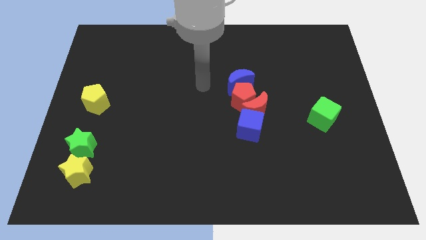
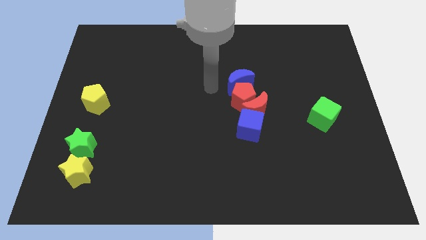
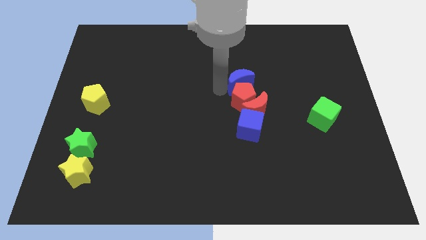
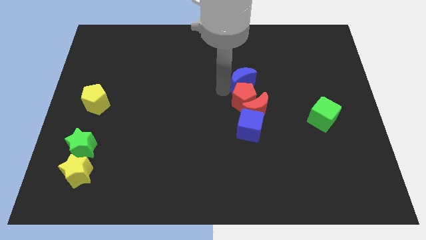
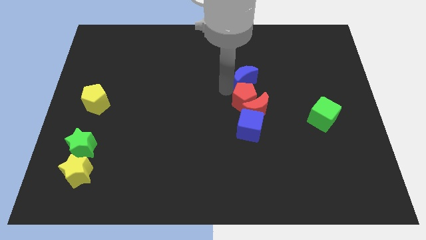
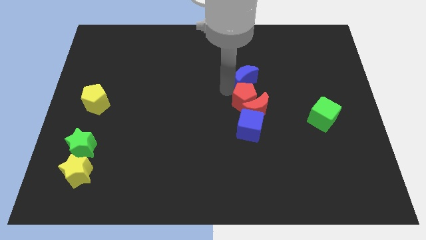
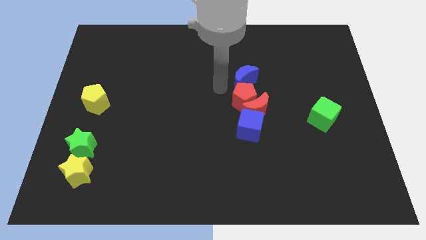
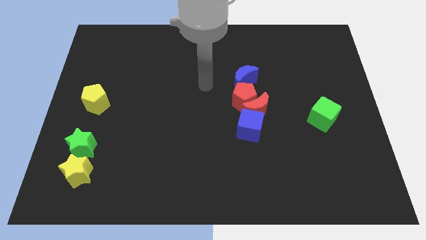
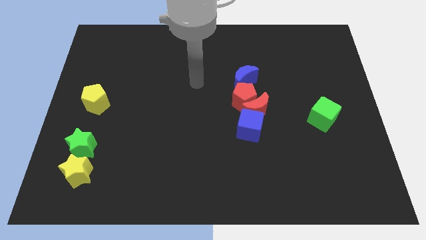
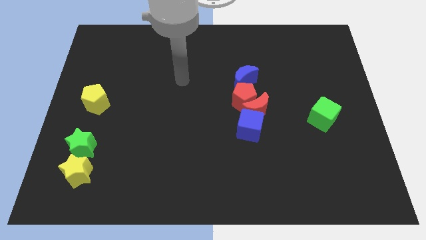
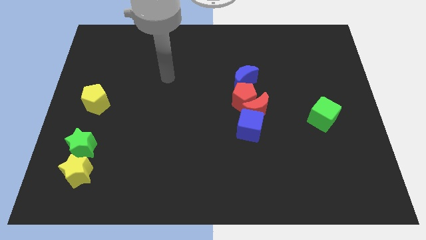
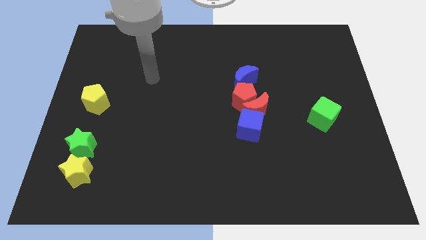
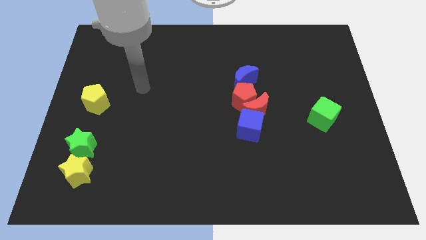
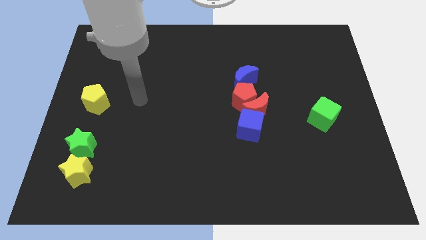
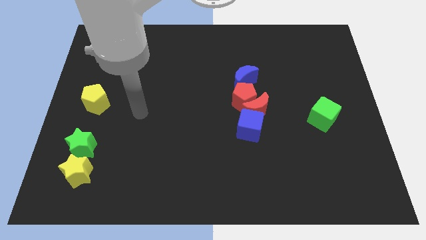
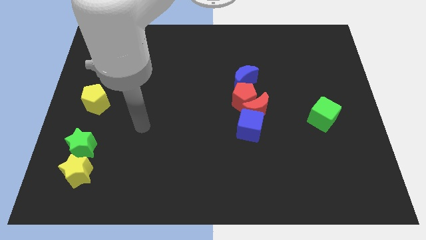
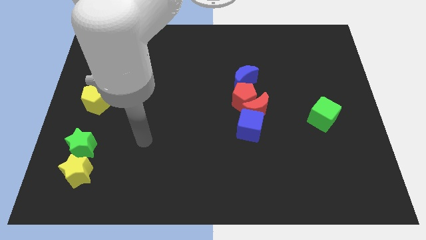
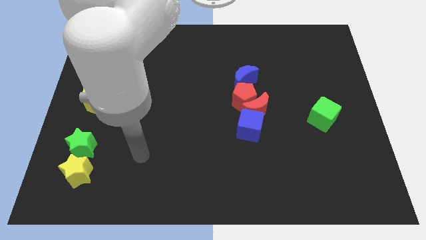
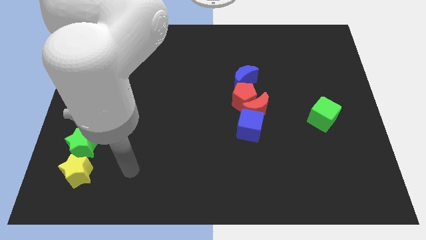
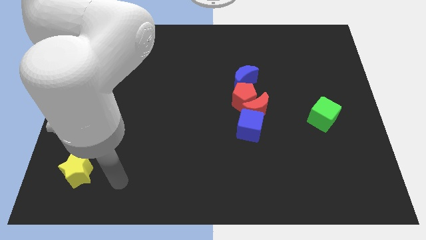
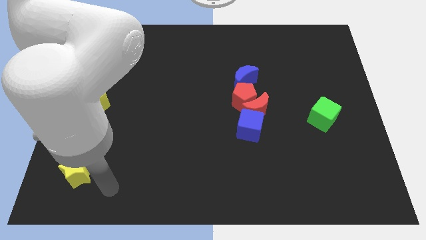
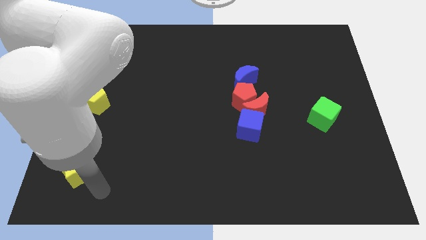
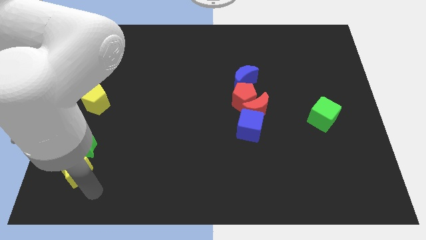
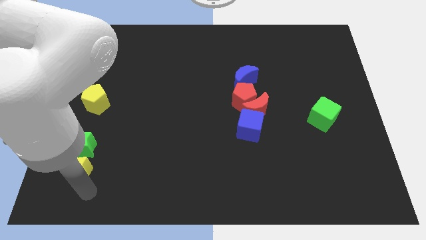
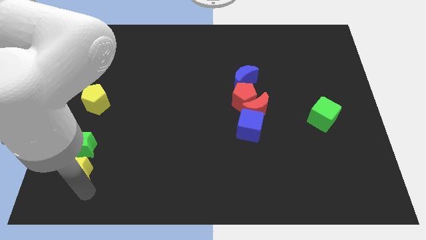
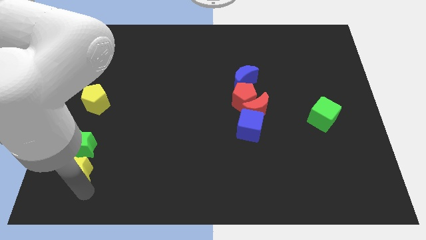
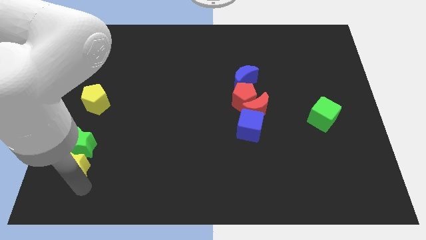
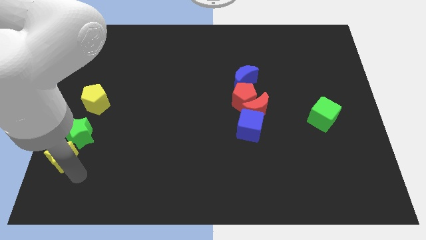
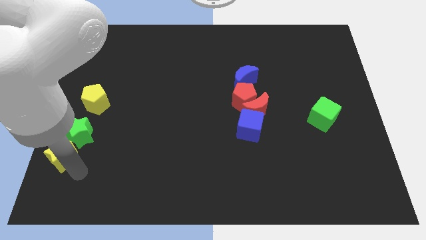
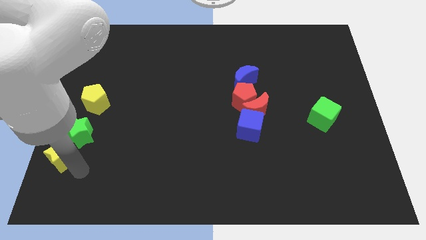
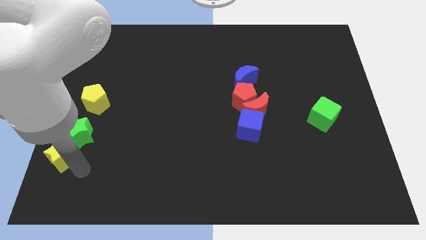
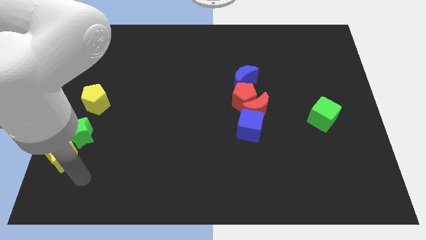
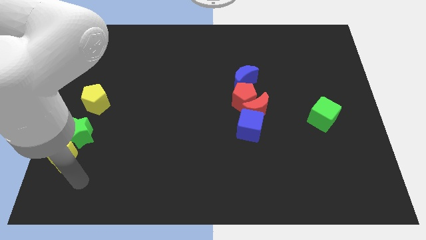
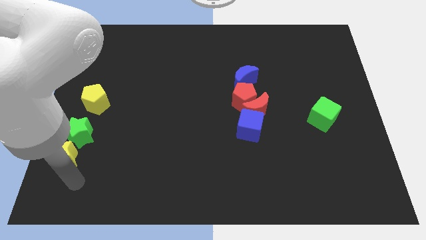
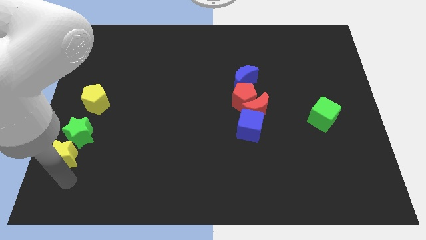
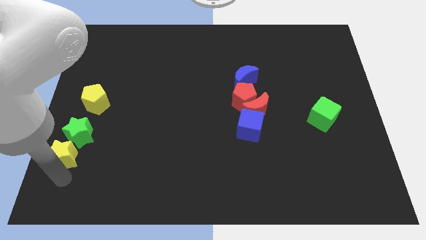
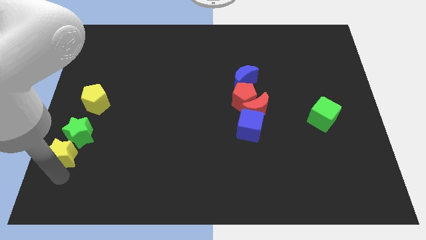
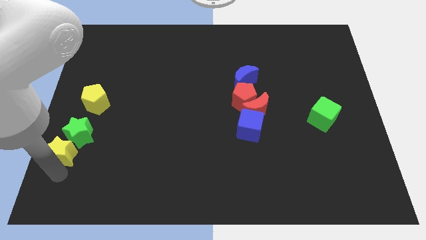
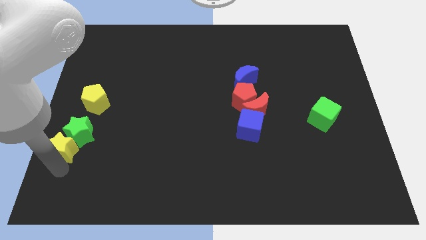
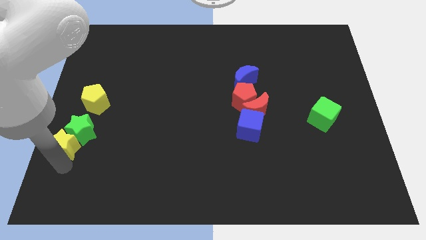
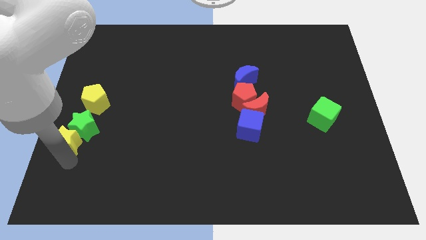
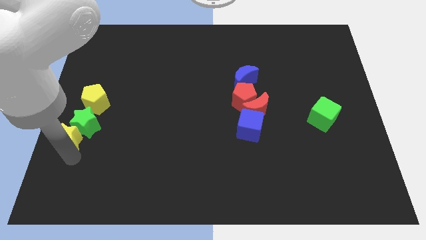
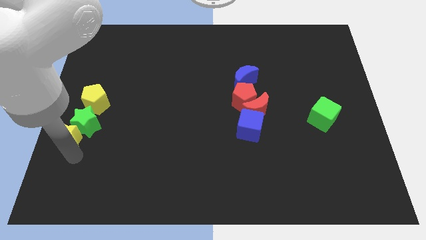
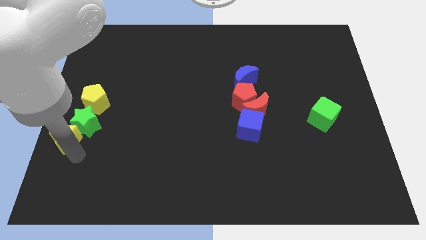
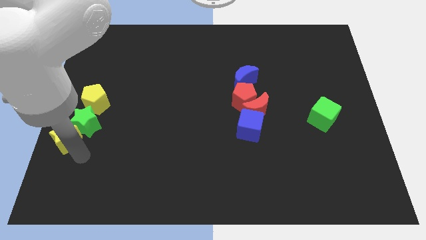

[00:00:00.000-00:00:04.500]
move the yellow star along with the green star into the yellow pentagon

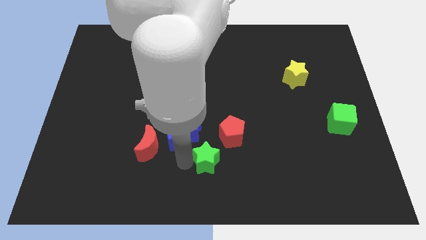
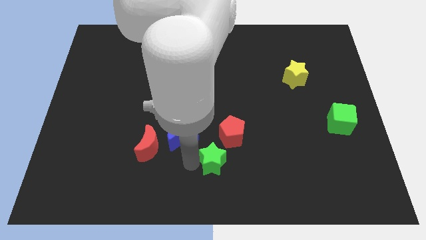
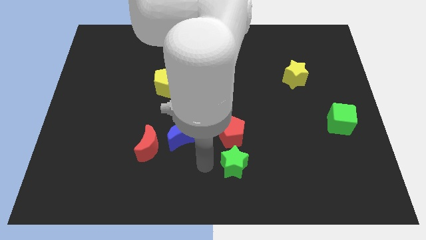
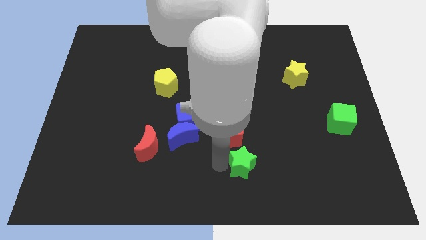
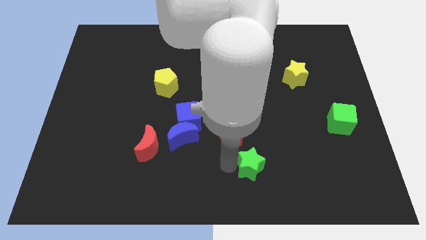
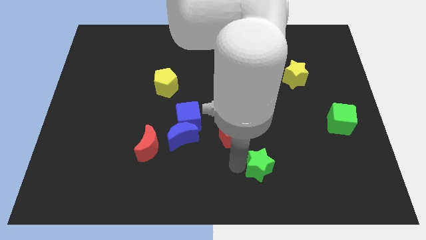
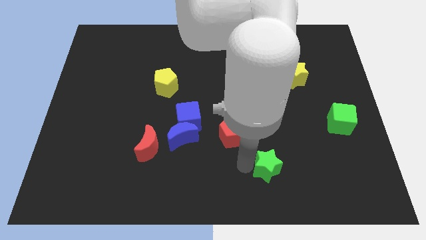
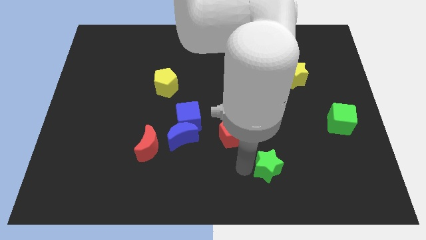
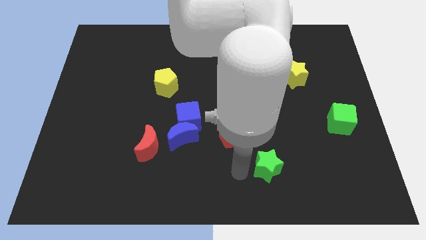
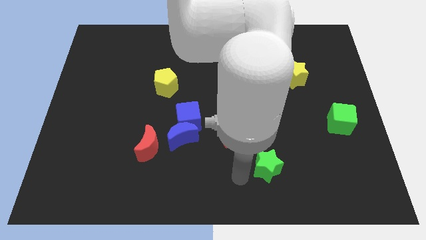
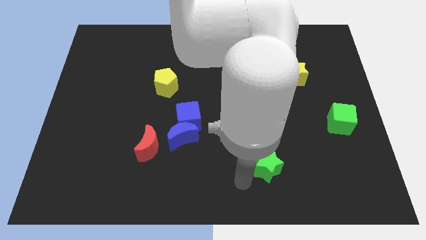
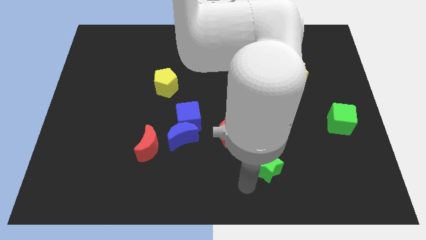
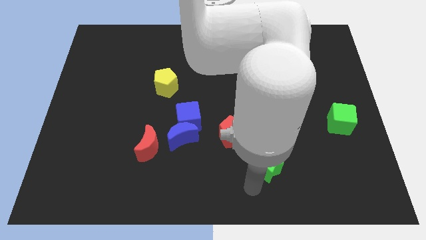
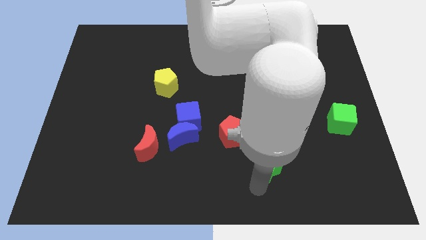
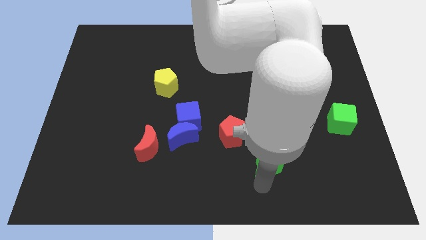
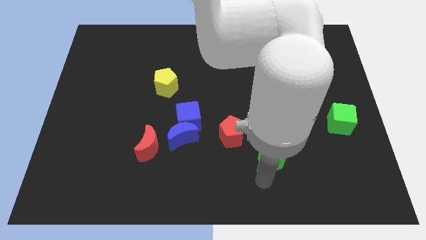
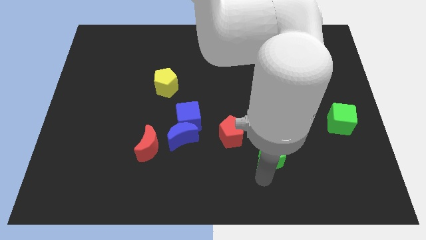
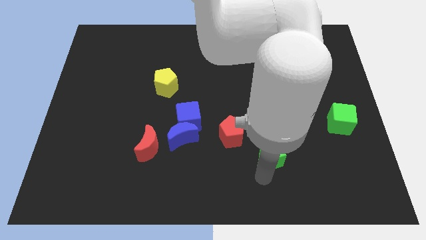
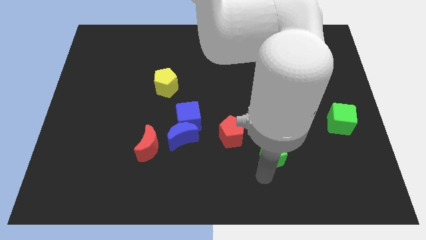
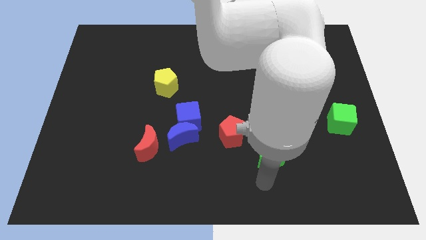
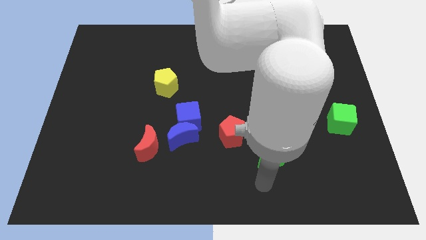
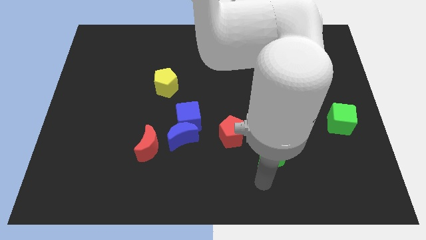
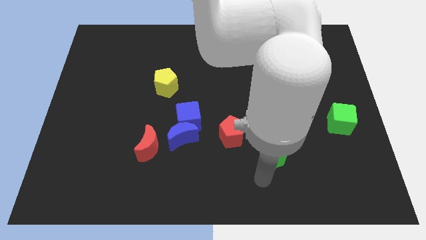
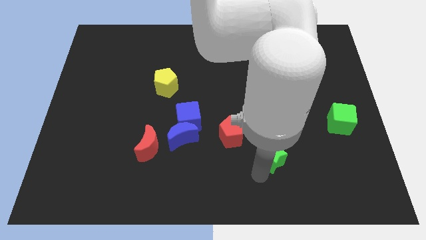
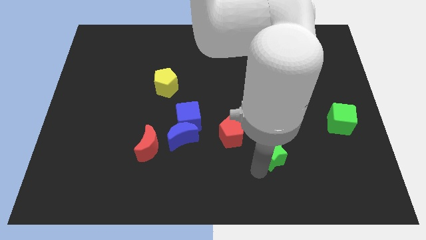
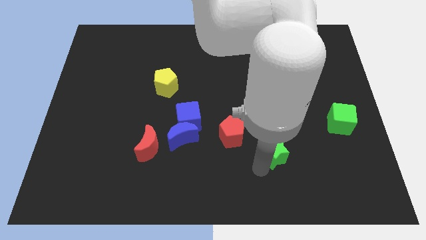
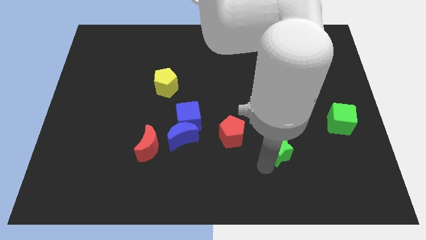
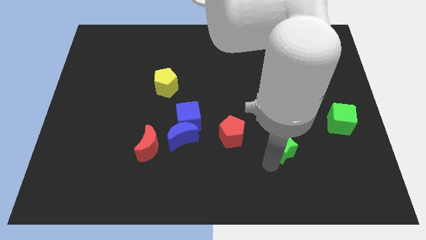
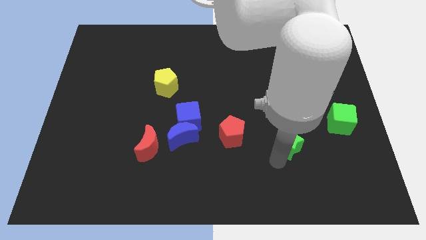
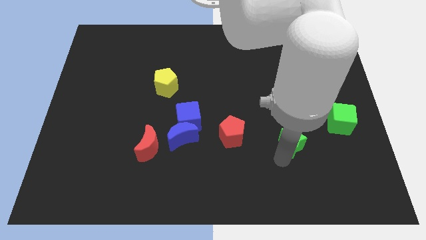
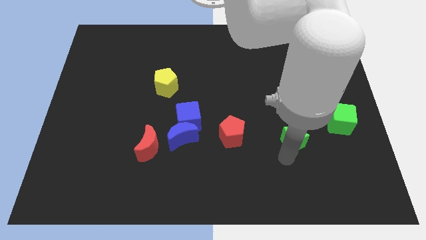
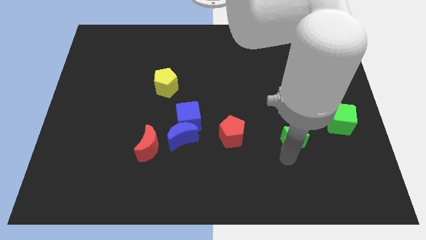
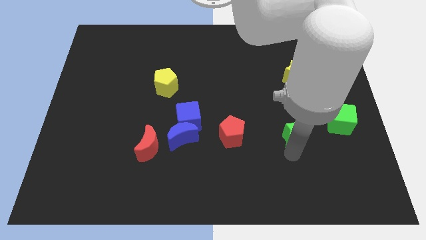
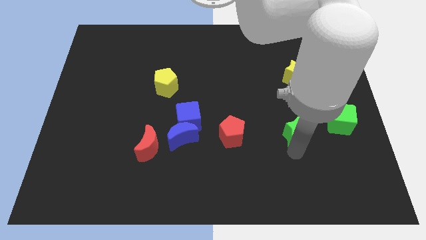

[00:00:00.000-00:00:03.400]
push the green star to the bottom of the yellow star

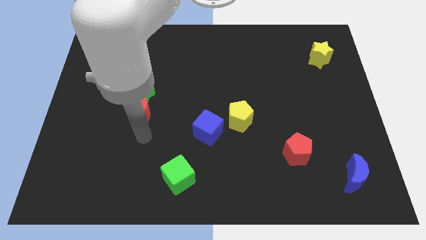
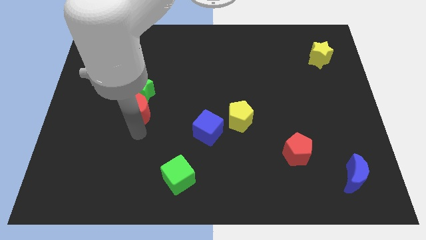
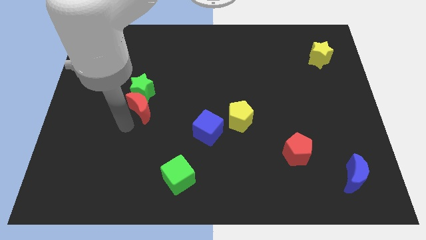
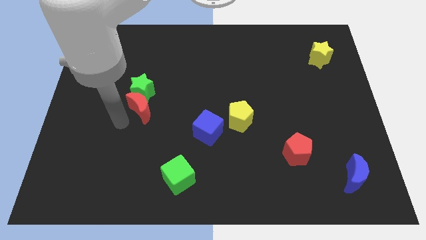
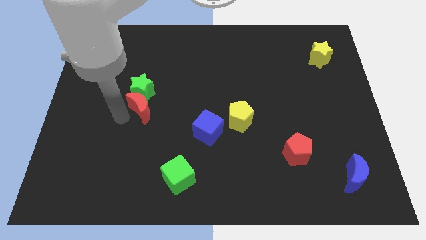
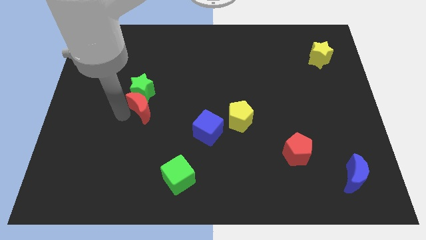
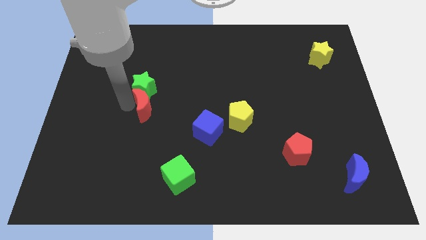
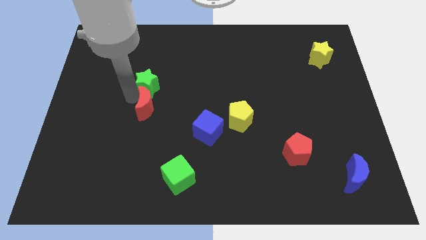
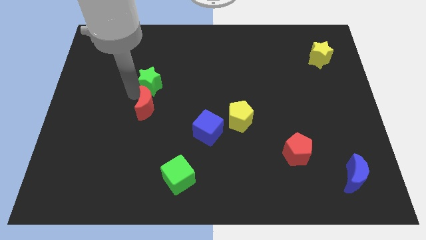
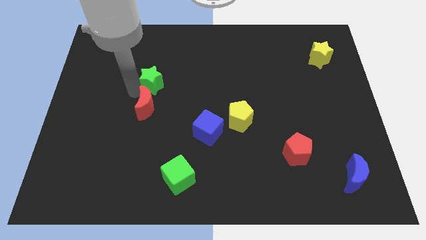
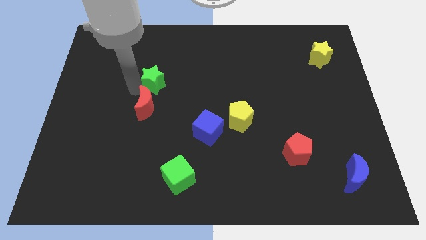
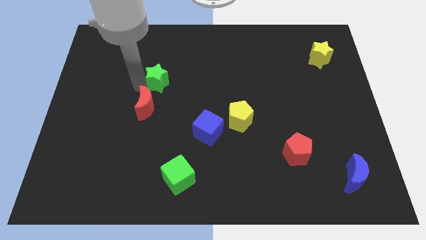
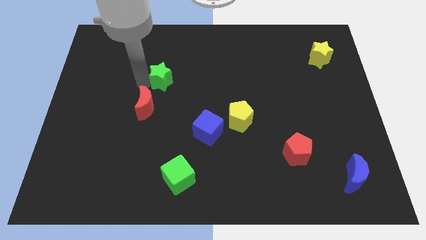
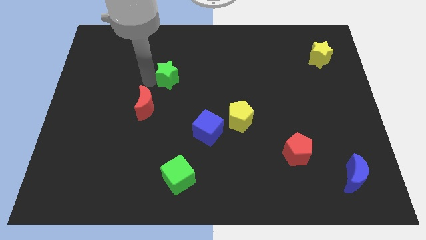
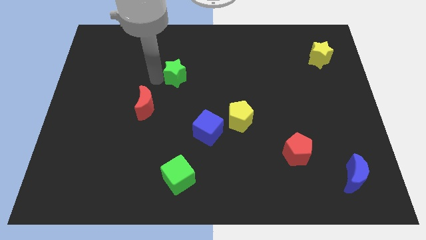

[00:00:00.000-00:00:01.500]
separate the green star from the red moon
